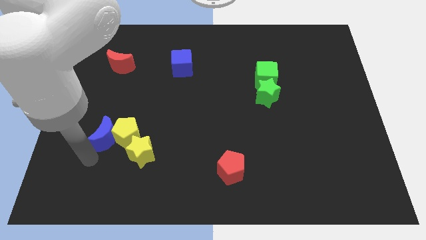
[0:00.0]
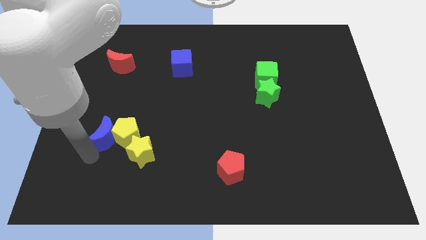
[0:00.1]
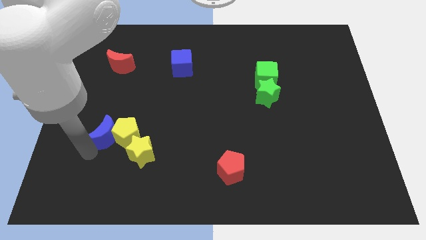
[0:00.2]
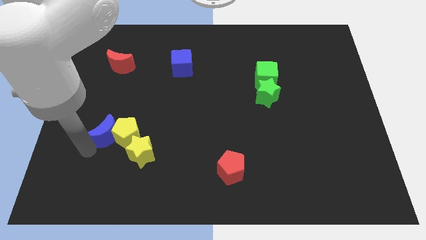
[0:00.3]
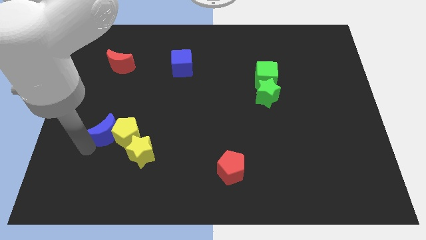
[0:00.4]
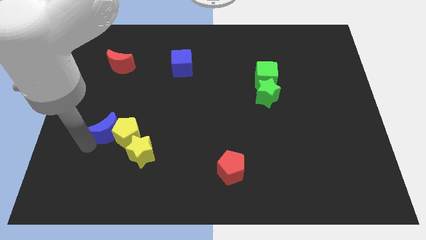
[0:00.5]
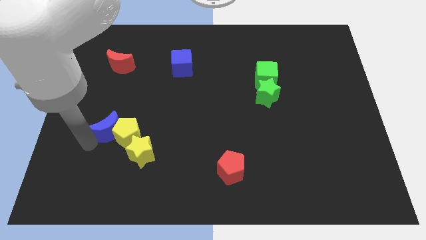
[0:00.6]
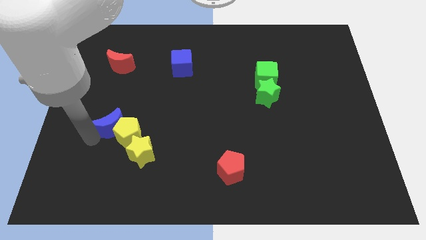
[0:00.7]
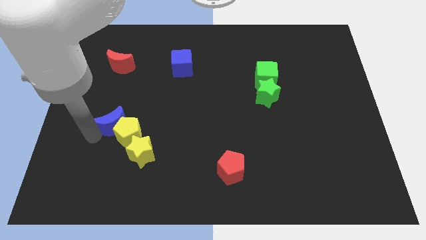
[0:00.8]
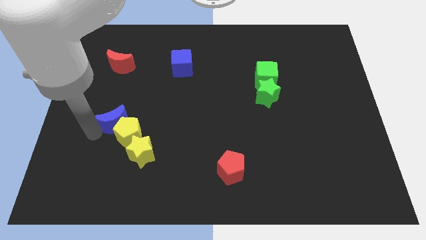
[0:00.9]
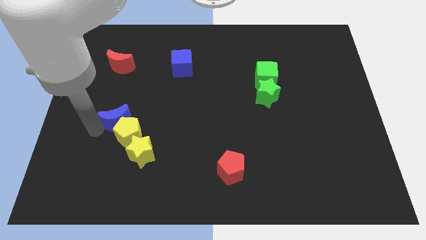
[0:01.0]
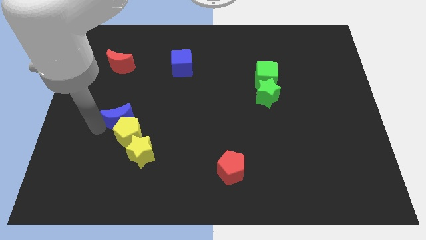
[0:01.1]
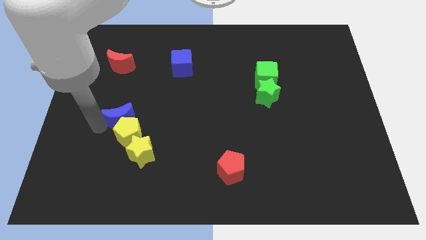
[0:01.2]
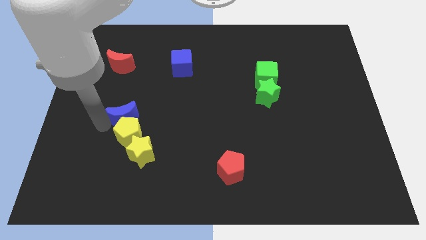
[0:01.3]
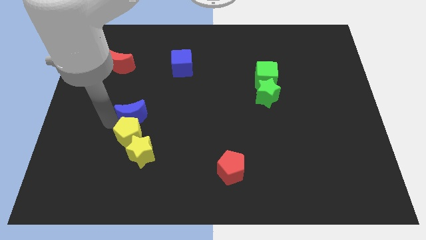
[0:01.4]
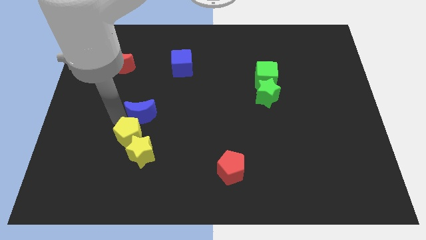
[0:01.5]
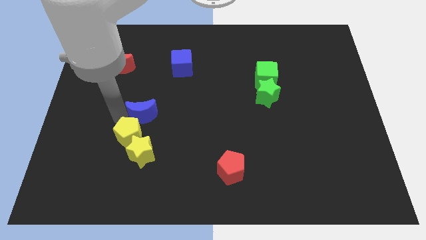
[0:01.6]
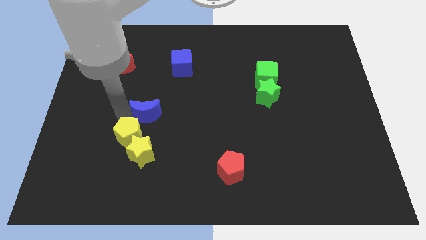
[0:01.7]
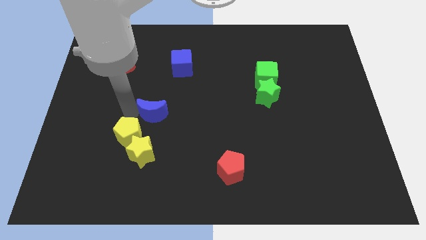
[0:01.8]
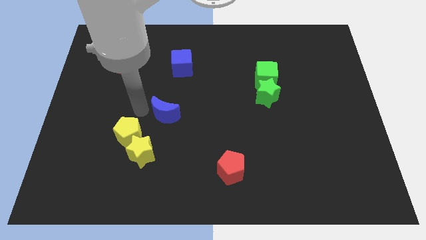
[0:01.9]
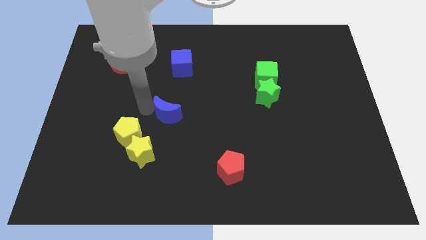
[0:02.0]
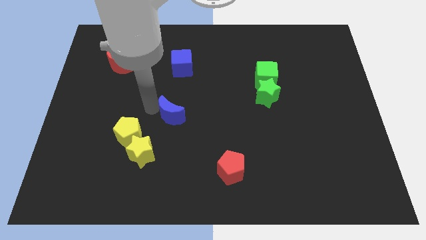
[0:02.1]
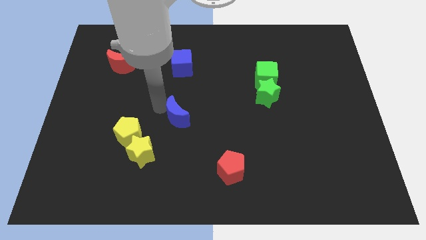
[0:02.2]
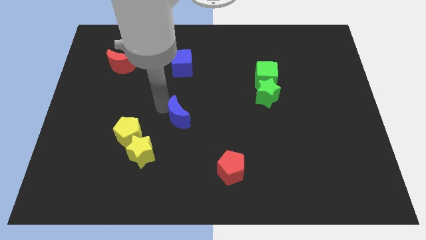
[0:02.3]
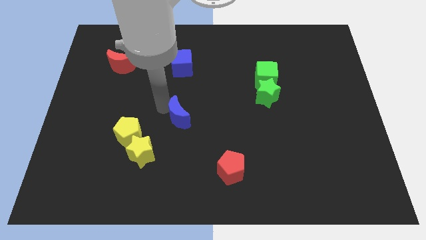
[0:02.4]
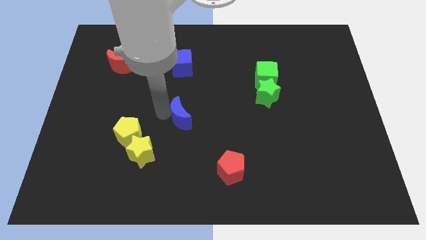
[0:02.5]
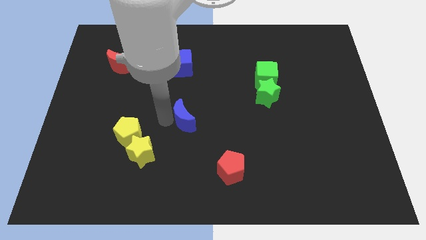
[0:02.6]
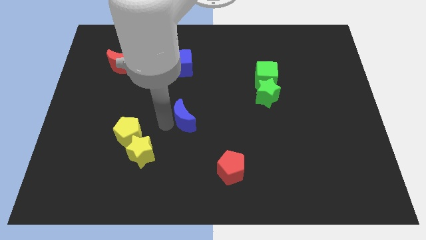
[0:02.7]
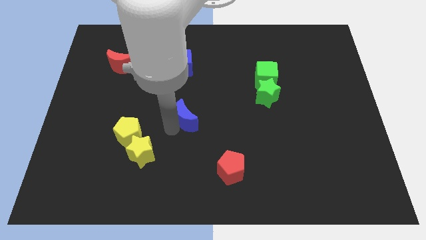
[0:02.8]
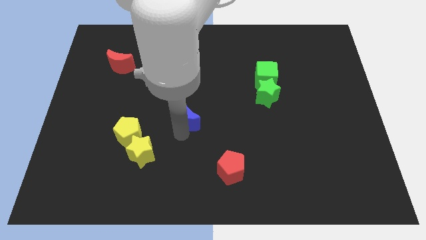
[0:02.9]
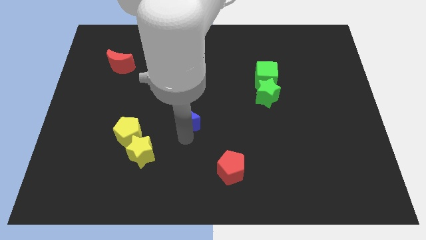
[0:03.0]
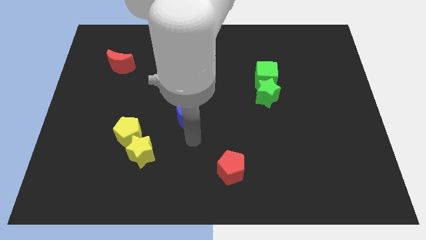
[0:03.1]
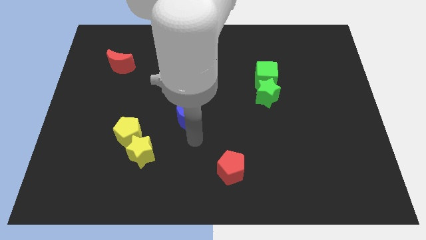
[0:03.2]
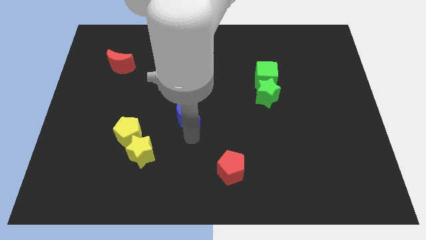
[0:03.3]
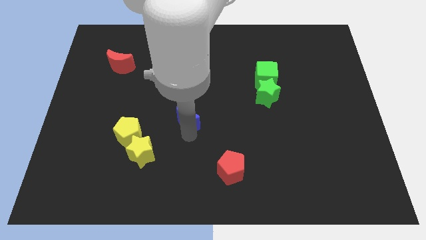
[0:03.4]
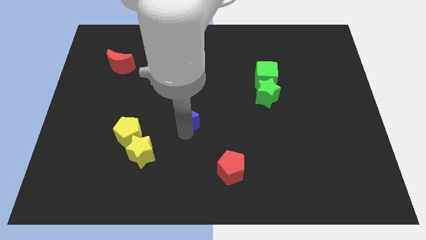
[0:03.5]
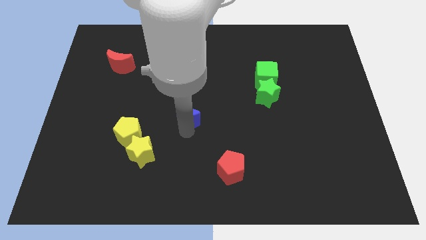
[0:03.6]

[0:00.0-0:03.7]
push the blue moon towards the center of the board

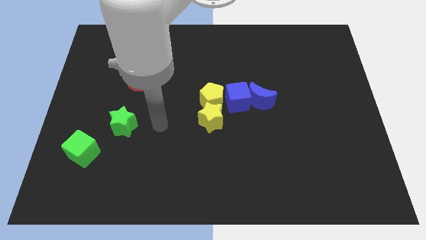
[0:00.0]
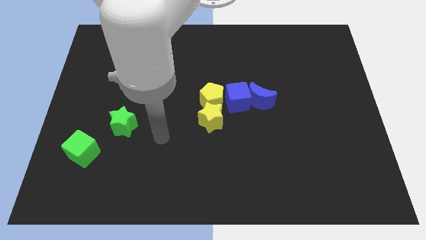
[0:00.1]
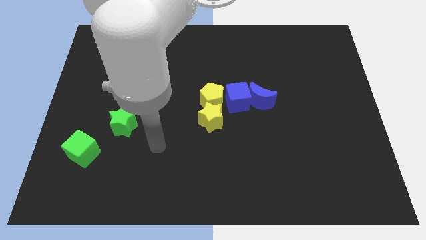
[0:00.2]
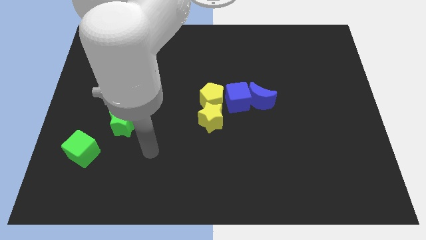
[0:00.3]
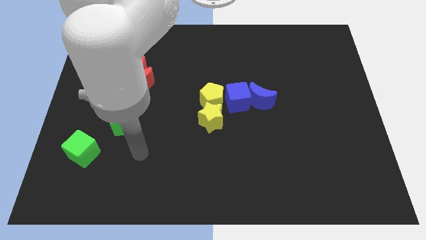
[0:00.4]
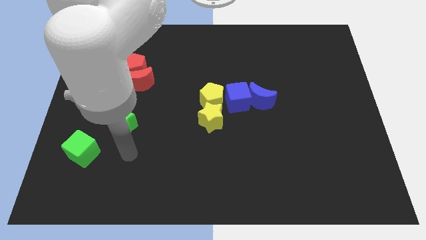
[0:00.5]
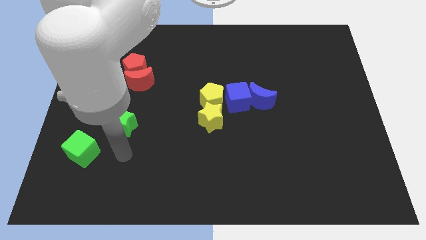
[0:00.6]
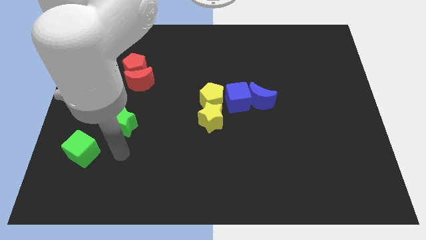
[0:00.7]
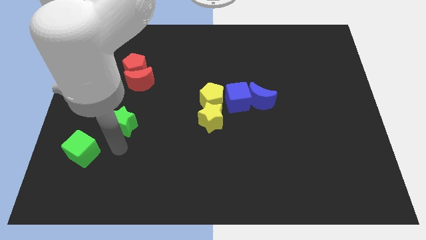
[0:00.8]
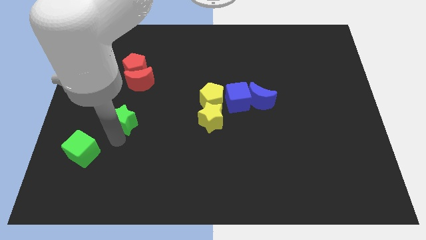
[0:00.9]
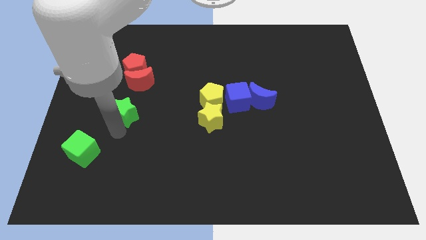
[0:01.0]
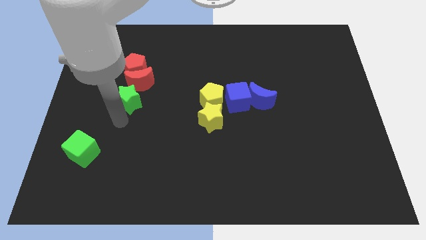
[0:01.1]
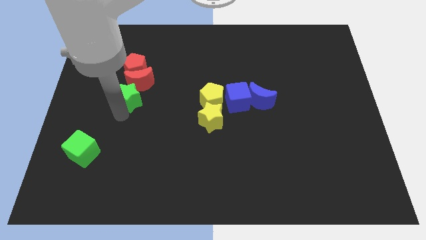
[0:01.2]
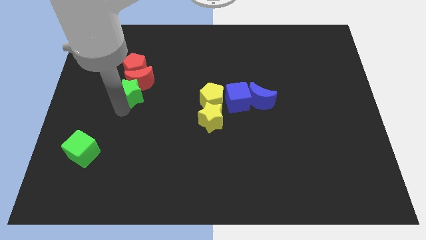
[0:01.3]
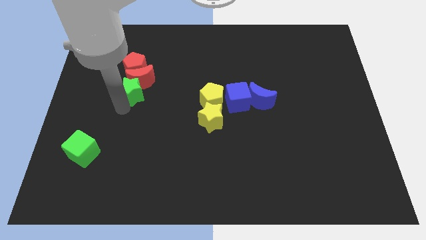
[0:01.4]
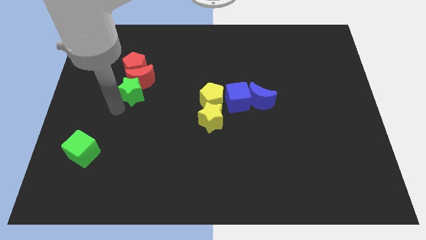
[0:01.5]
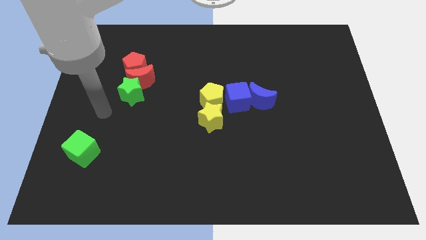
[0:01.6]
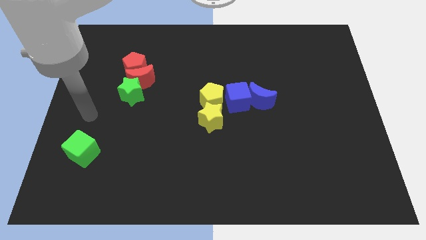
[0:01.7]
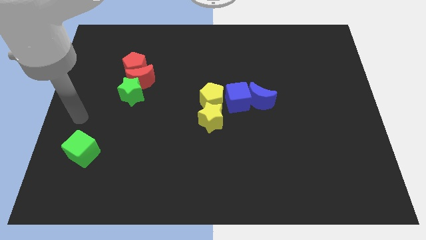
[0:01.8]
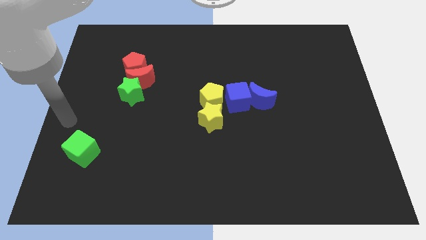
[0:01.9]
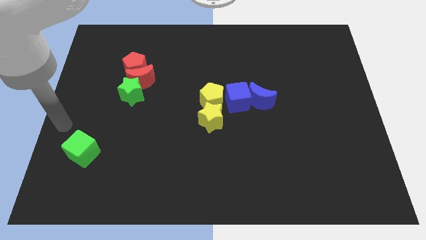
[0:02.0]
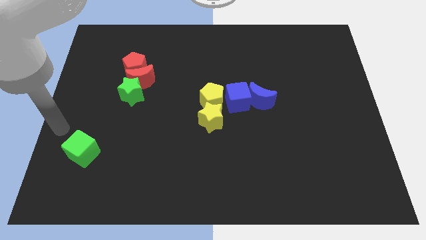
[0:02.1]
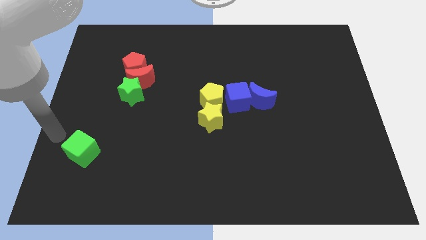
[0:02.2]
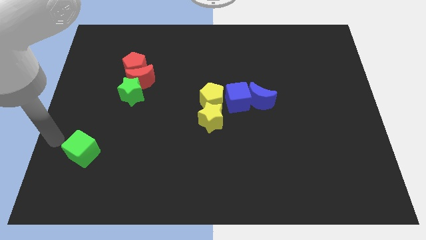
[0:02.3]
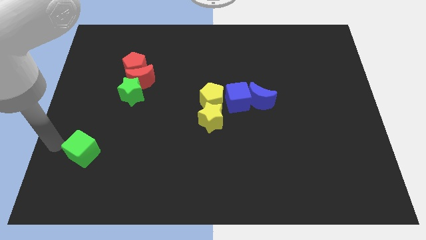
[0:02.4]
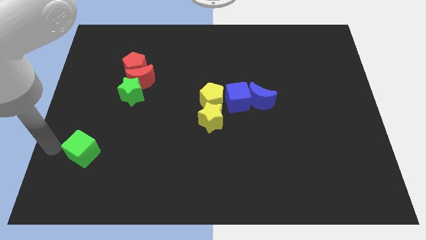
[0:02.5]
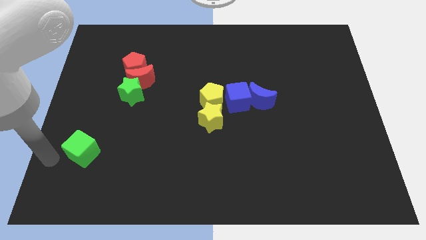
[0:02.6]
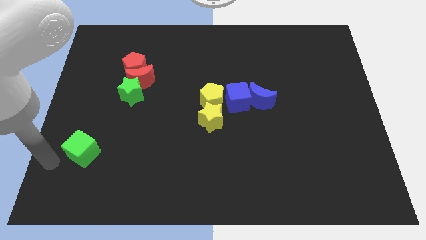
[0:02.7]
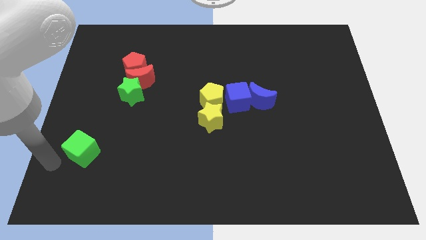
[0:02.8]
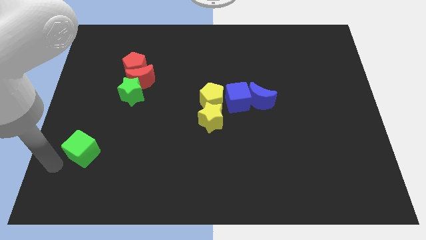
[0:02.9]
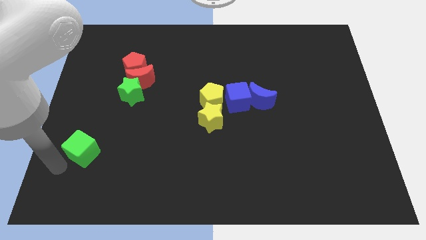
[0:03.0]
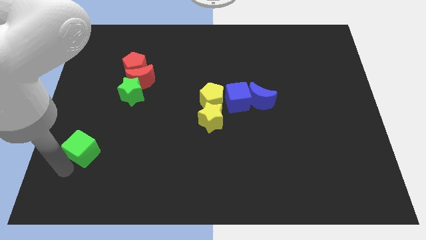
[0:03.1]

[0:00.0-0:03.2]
move the green star into the red moon

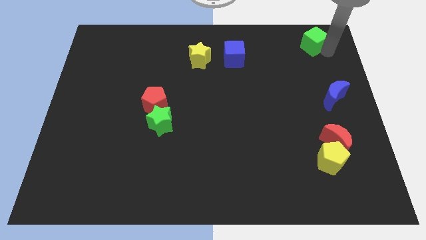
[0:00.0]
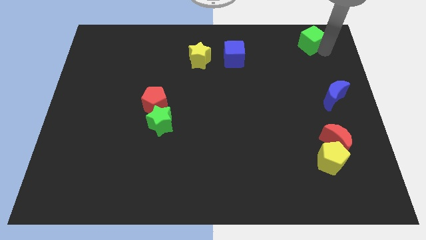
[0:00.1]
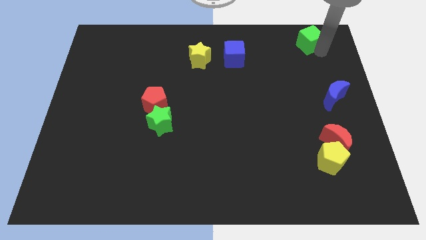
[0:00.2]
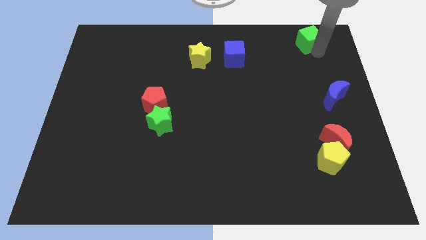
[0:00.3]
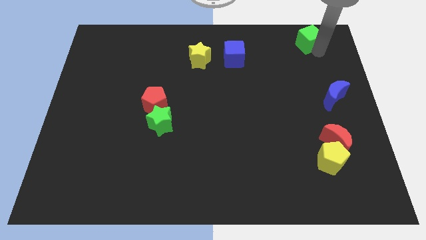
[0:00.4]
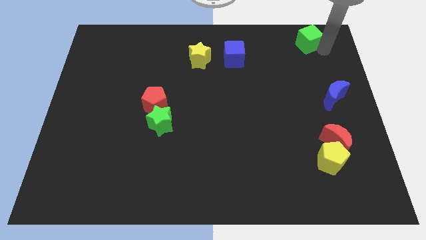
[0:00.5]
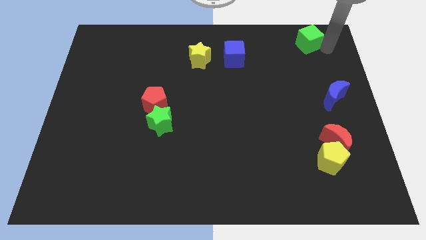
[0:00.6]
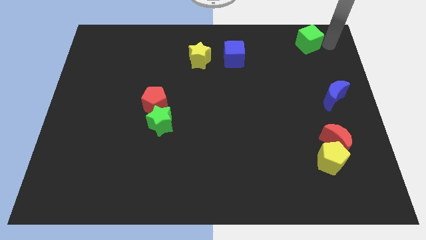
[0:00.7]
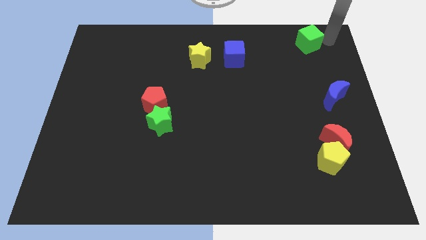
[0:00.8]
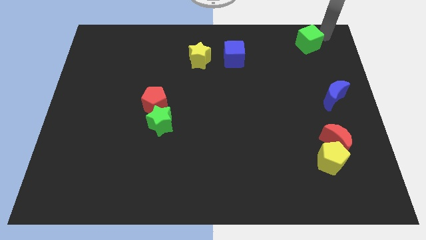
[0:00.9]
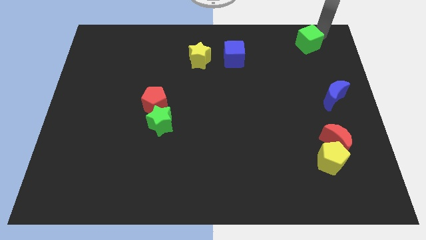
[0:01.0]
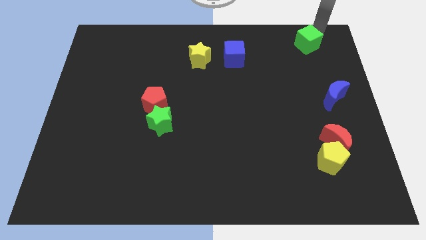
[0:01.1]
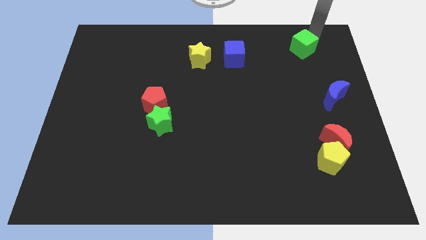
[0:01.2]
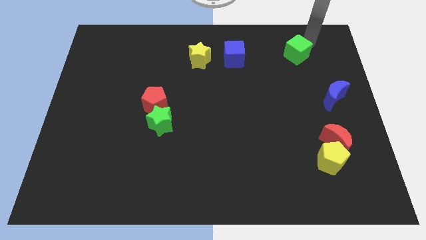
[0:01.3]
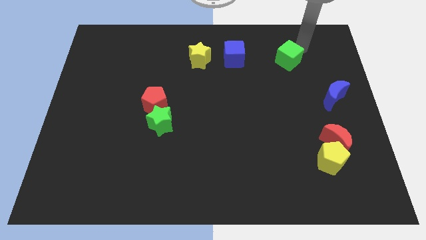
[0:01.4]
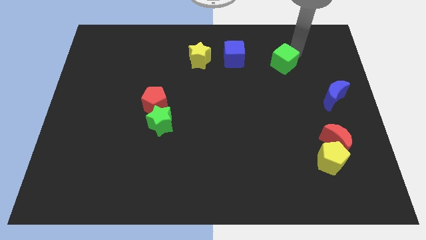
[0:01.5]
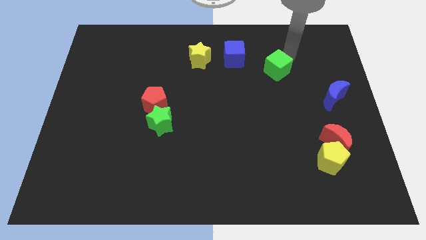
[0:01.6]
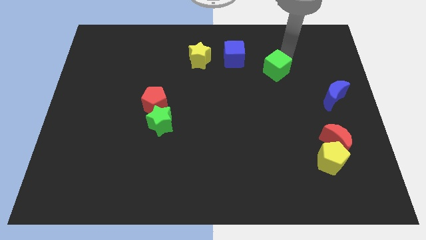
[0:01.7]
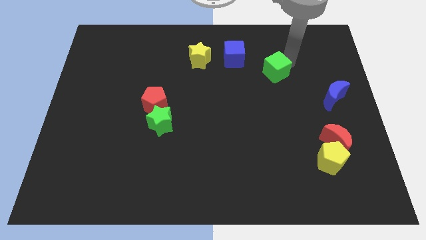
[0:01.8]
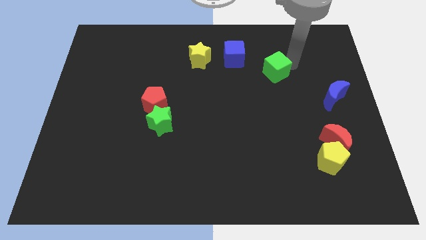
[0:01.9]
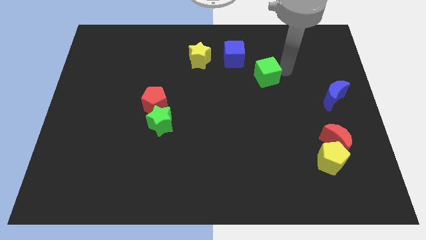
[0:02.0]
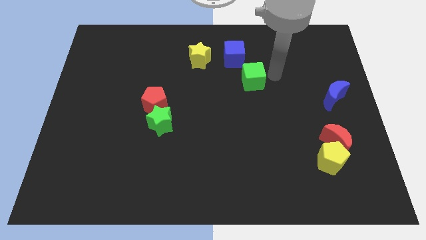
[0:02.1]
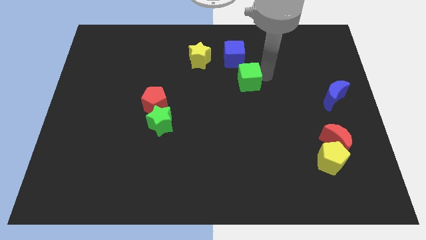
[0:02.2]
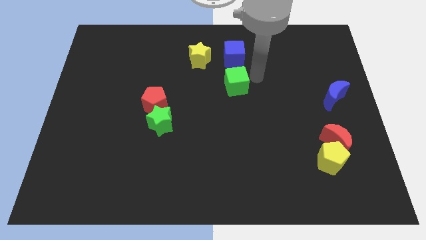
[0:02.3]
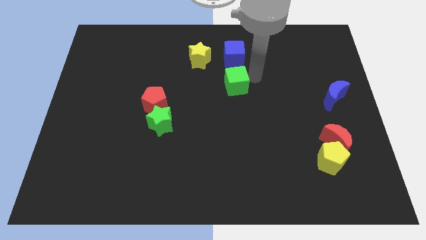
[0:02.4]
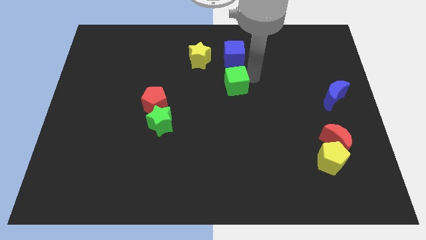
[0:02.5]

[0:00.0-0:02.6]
move the green cube below blue cube
